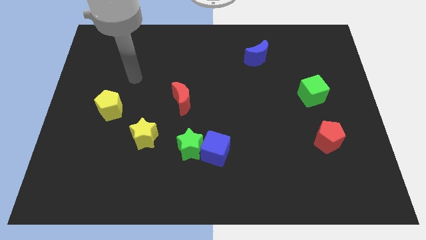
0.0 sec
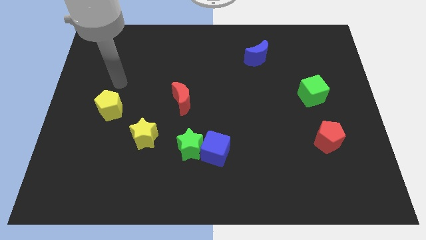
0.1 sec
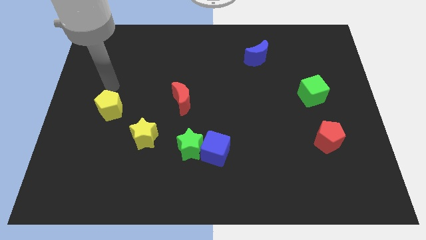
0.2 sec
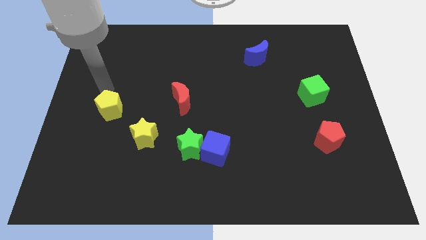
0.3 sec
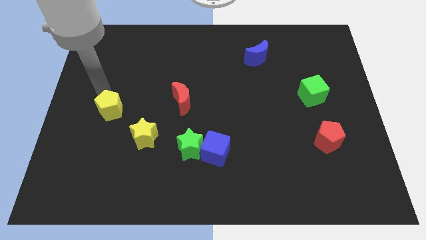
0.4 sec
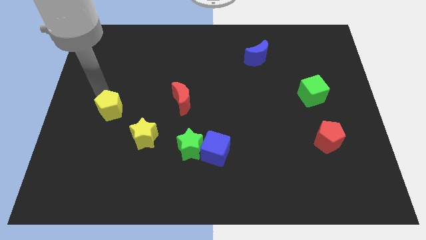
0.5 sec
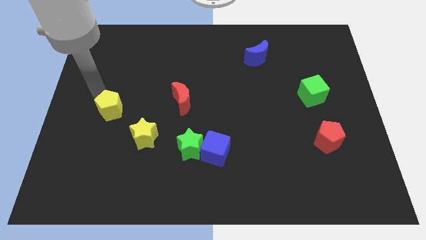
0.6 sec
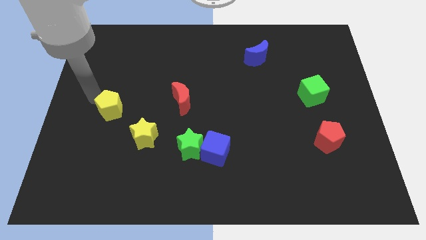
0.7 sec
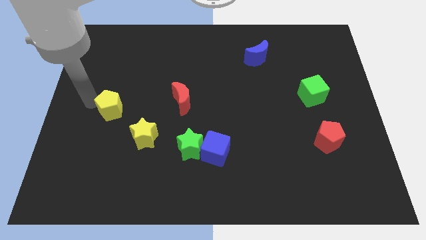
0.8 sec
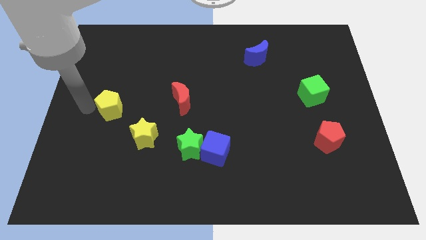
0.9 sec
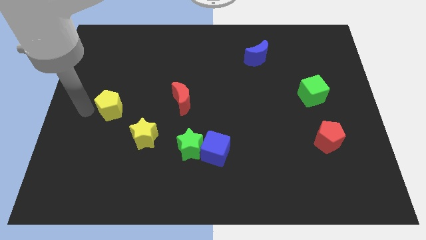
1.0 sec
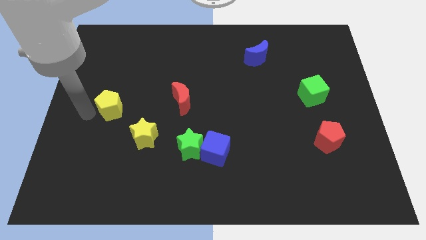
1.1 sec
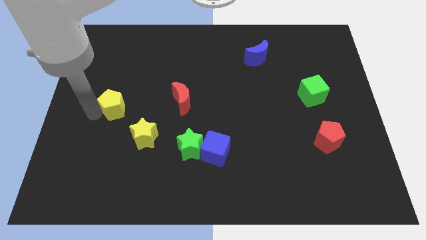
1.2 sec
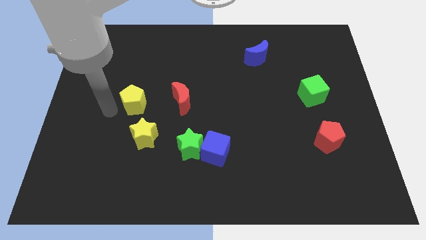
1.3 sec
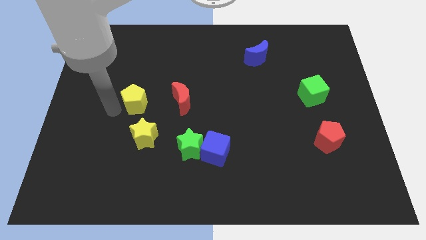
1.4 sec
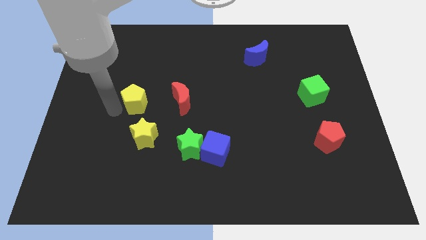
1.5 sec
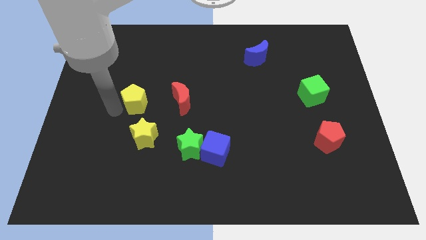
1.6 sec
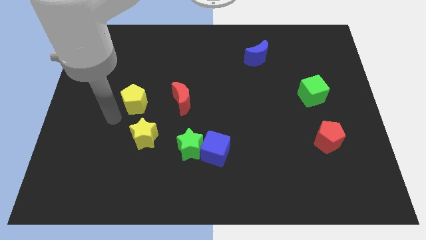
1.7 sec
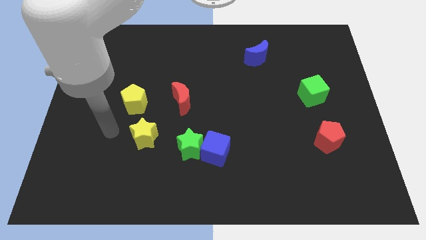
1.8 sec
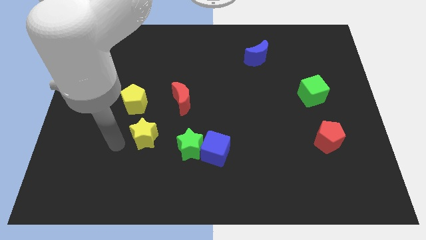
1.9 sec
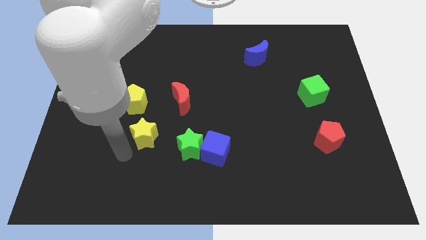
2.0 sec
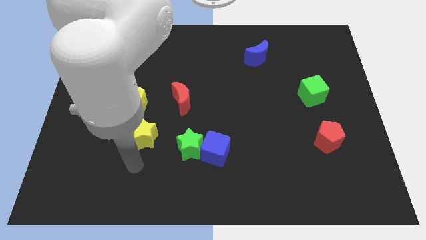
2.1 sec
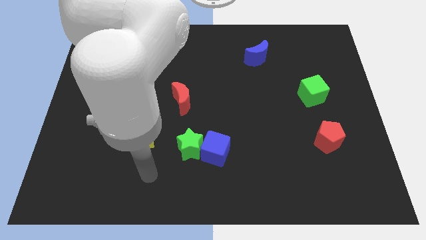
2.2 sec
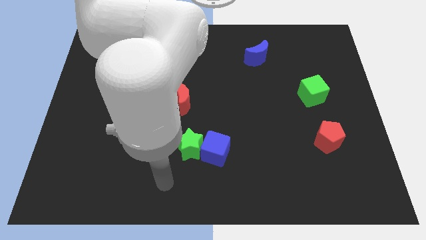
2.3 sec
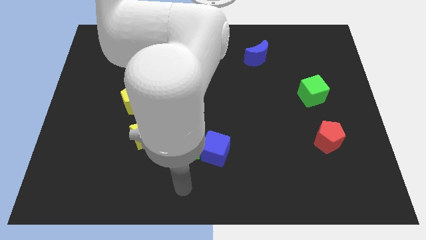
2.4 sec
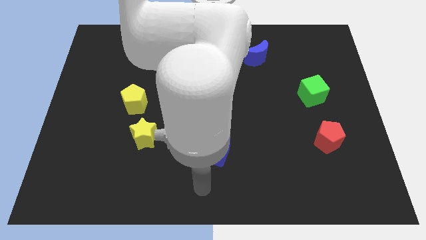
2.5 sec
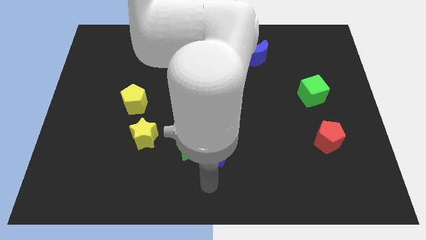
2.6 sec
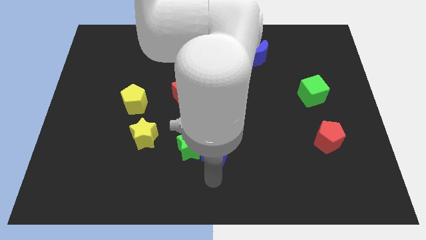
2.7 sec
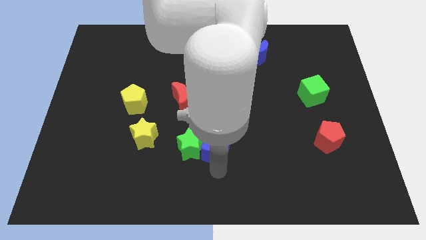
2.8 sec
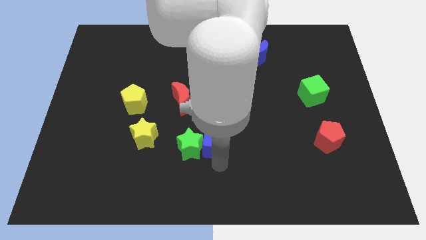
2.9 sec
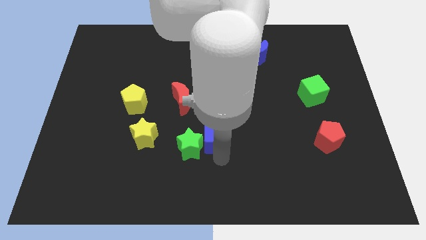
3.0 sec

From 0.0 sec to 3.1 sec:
move yellow pentagon towards red moon

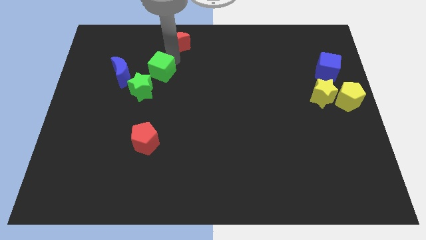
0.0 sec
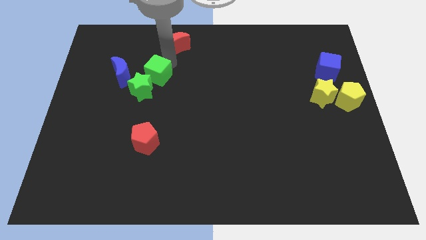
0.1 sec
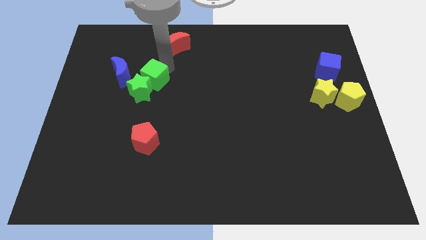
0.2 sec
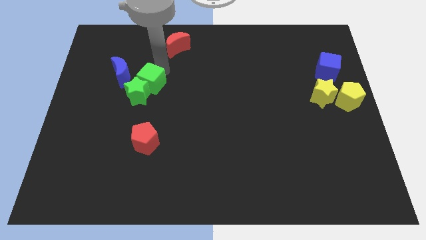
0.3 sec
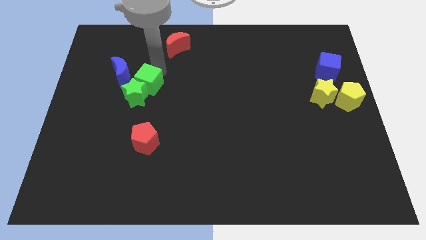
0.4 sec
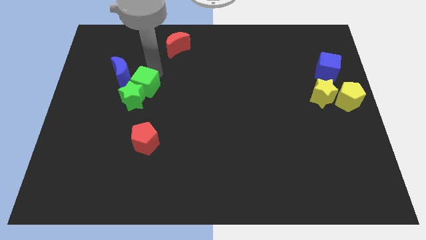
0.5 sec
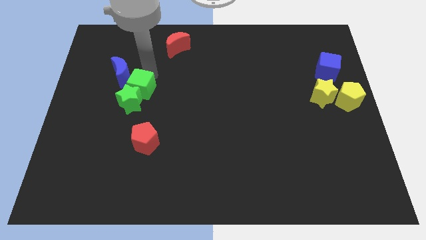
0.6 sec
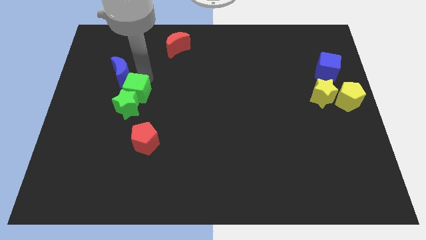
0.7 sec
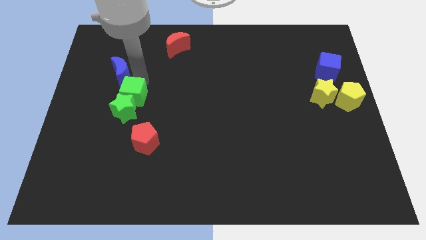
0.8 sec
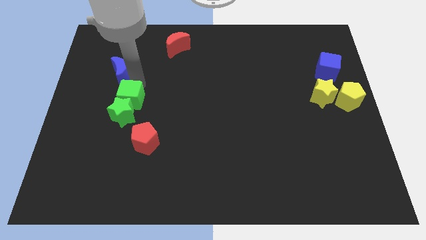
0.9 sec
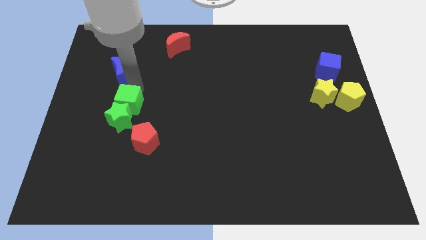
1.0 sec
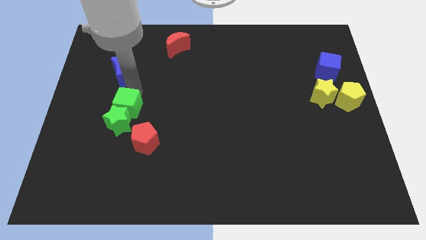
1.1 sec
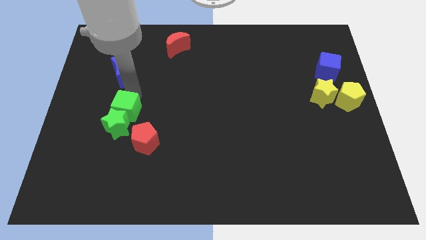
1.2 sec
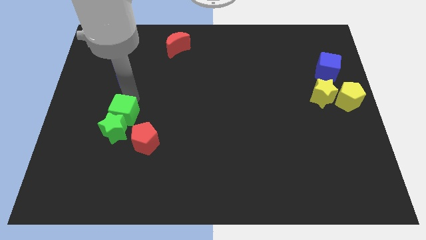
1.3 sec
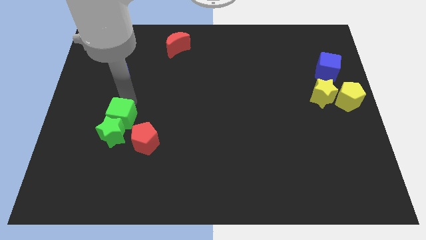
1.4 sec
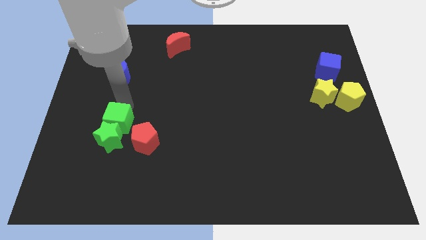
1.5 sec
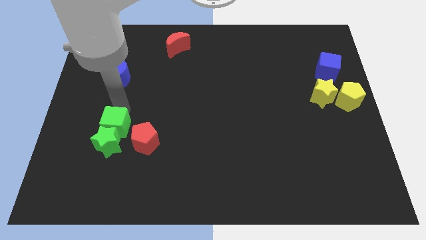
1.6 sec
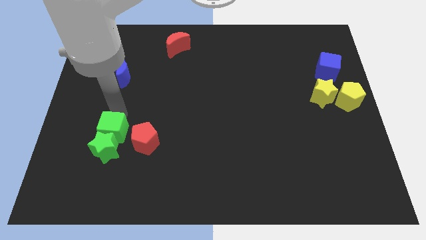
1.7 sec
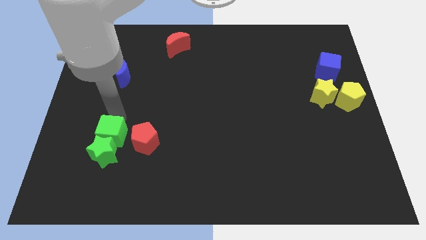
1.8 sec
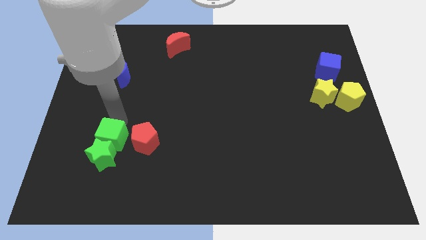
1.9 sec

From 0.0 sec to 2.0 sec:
push the green star with green cube to the left of red pentagon

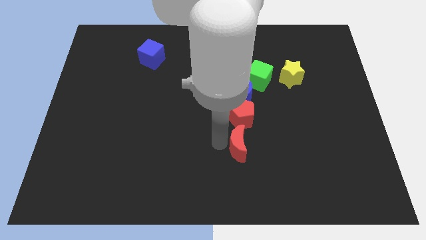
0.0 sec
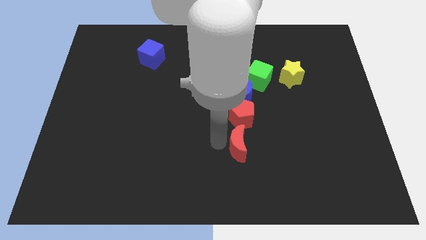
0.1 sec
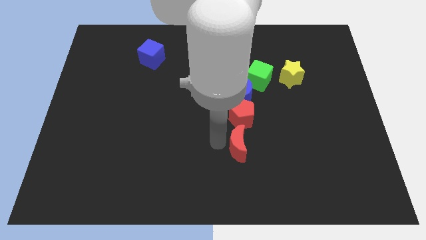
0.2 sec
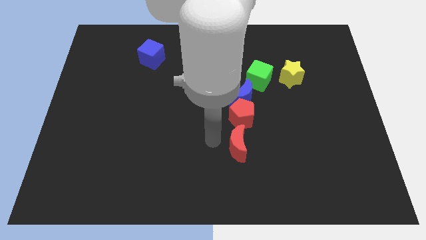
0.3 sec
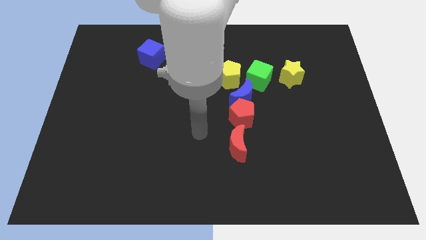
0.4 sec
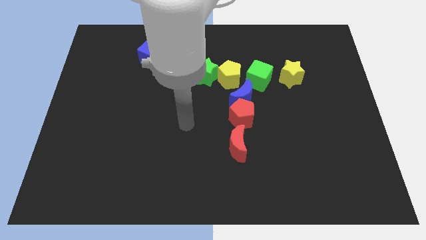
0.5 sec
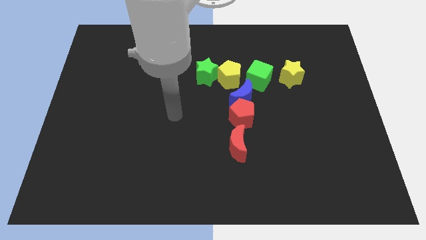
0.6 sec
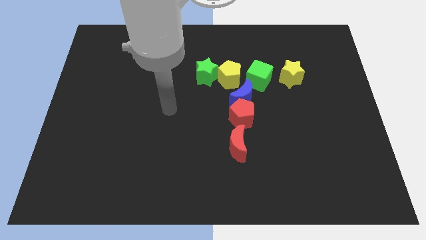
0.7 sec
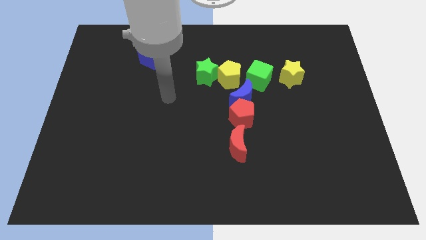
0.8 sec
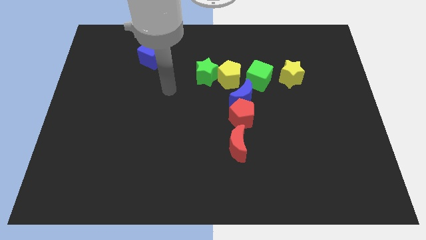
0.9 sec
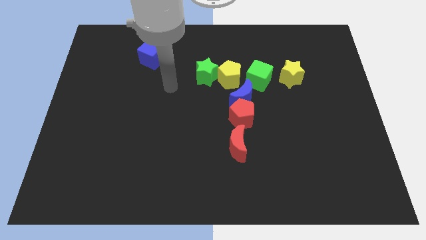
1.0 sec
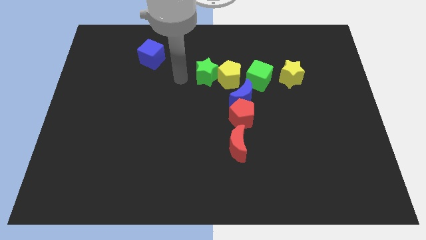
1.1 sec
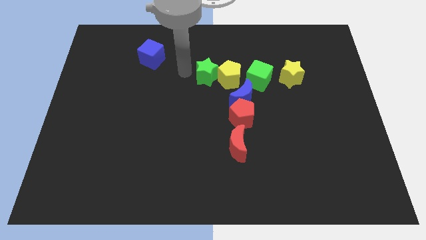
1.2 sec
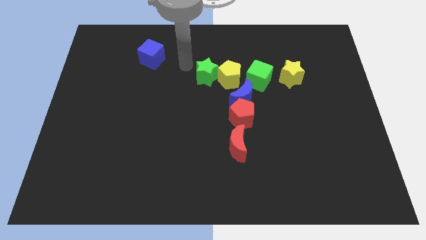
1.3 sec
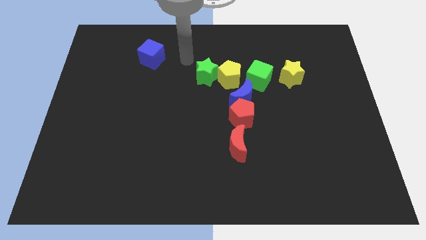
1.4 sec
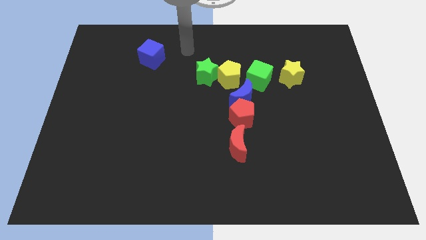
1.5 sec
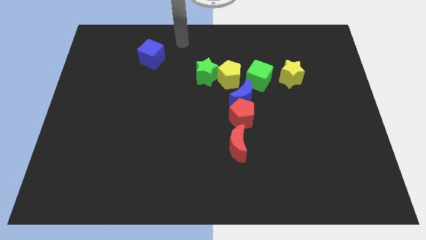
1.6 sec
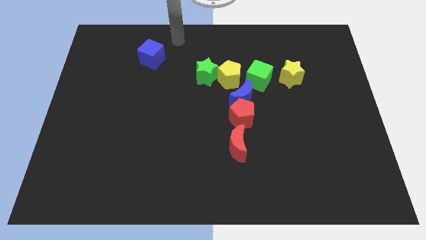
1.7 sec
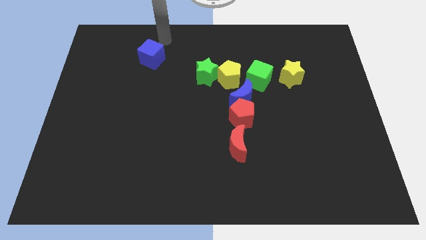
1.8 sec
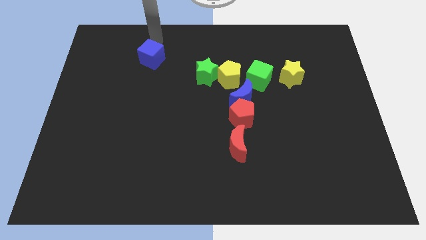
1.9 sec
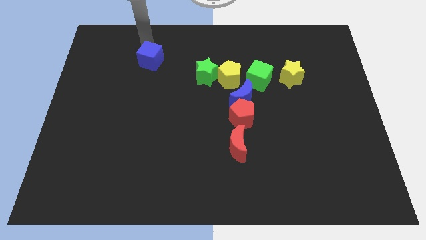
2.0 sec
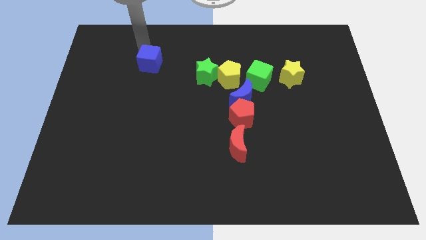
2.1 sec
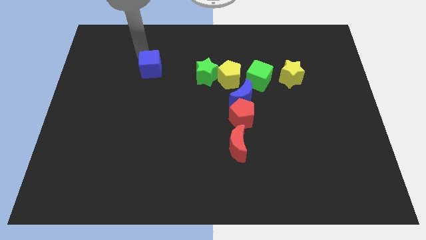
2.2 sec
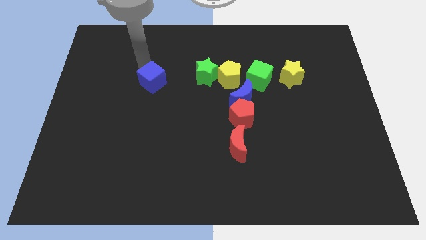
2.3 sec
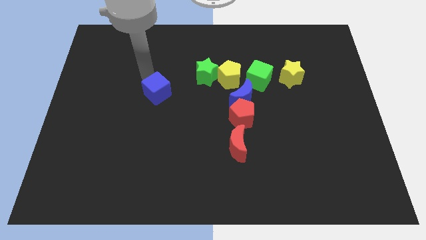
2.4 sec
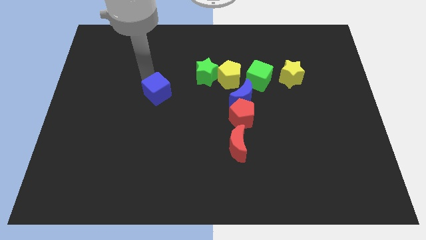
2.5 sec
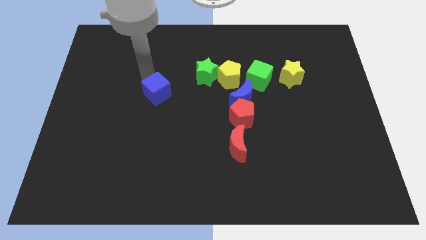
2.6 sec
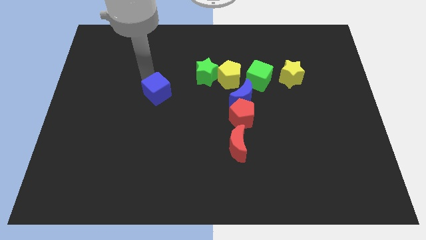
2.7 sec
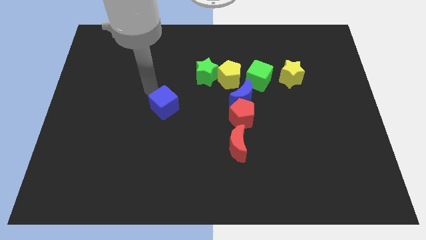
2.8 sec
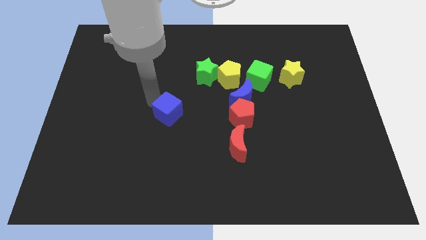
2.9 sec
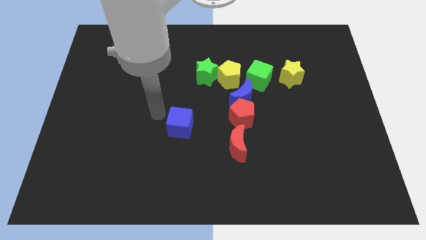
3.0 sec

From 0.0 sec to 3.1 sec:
place the blue cube parallel to red pentagon

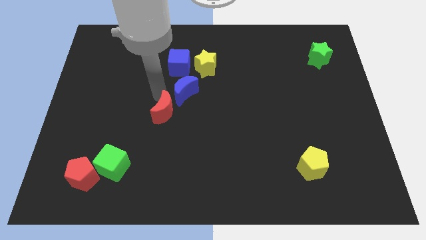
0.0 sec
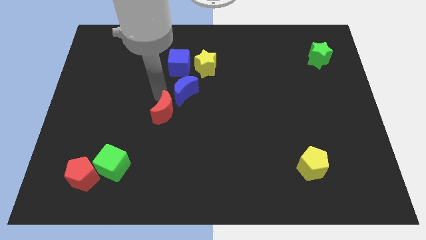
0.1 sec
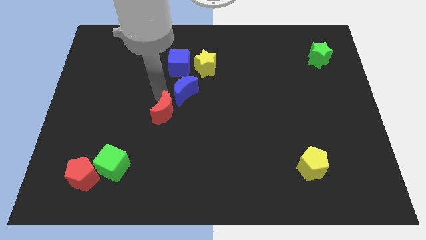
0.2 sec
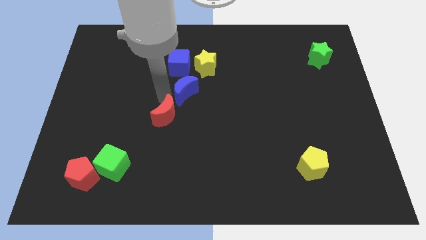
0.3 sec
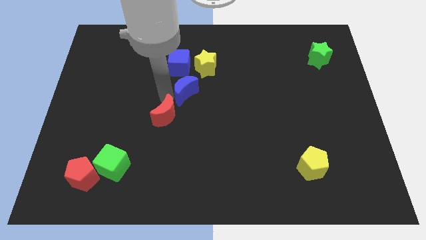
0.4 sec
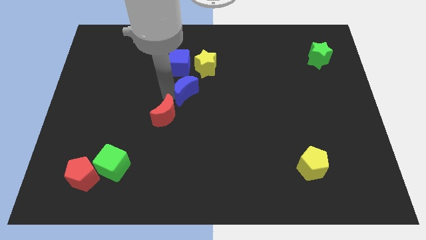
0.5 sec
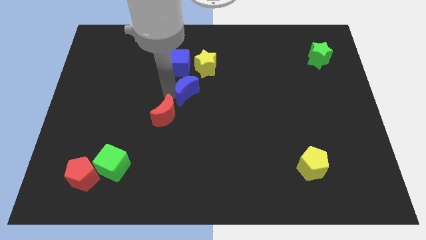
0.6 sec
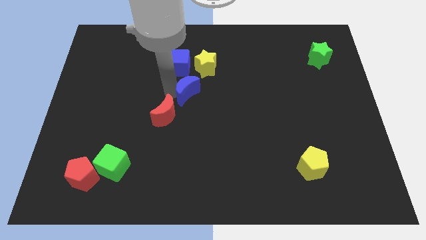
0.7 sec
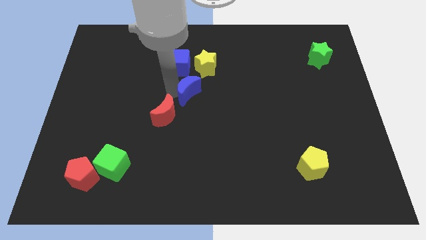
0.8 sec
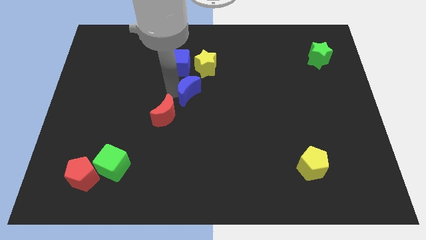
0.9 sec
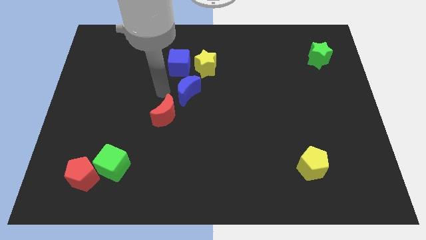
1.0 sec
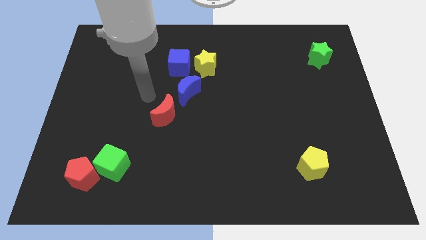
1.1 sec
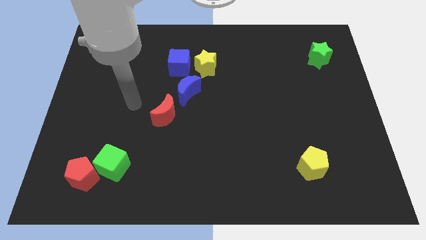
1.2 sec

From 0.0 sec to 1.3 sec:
move the crescents slightly towards the center of the board
